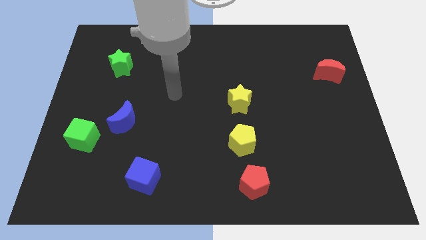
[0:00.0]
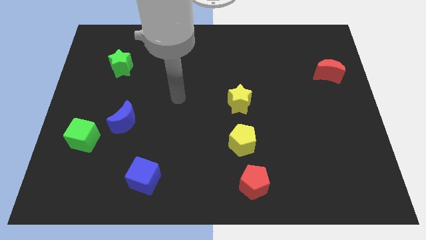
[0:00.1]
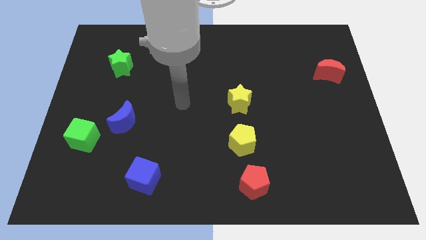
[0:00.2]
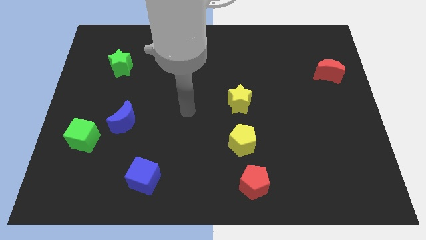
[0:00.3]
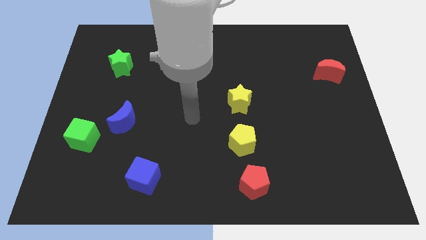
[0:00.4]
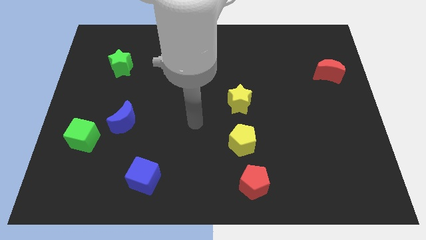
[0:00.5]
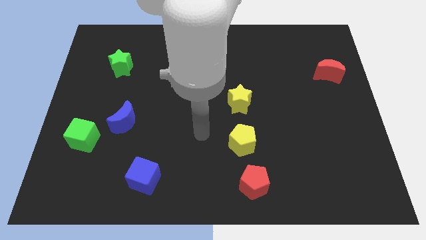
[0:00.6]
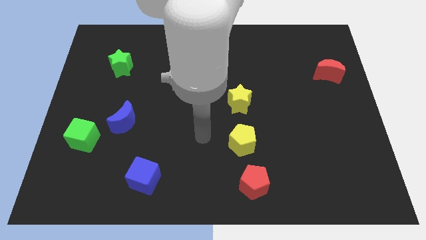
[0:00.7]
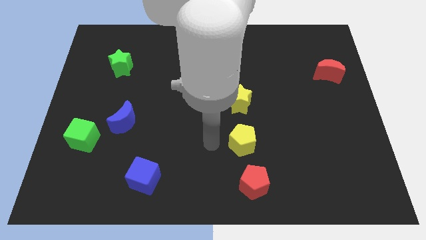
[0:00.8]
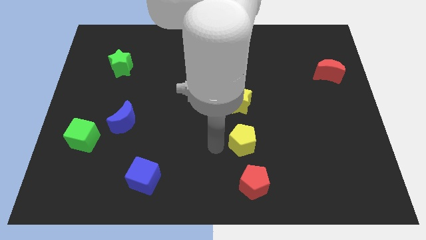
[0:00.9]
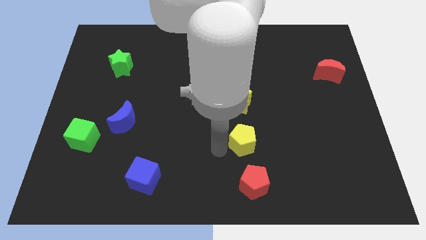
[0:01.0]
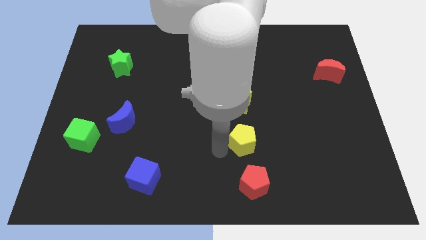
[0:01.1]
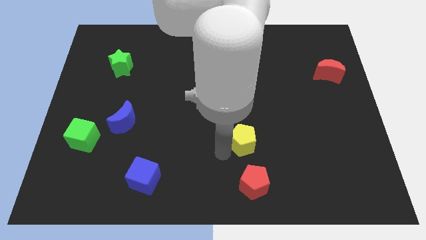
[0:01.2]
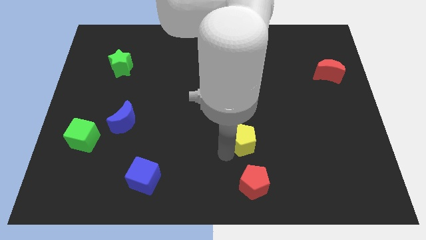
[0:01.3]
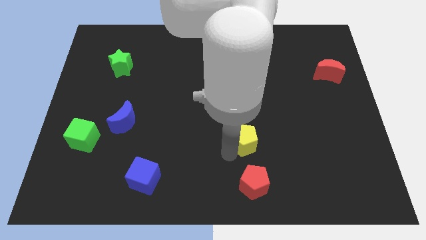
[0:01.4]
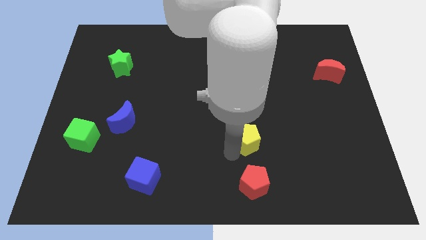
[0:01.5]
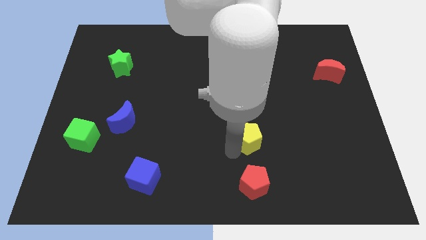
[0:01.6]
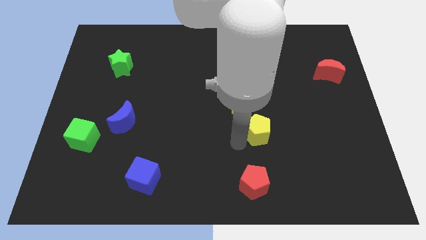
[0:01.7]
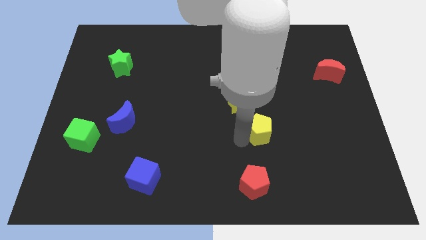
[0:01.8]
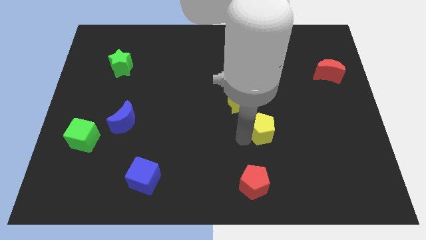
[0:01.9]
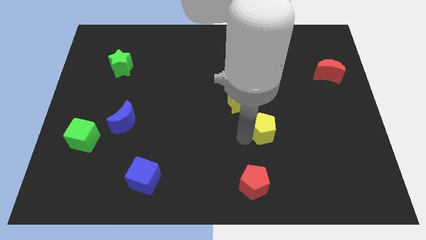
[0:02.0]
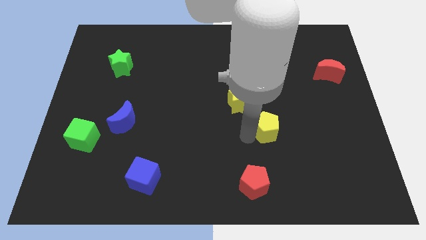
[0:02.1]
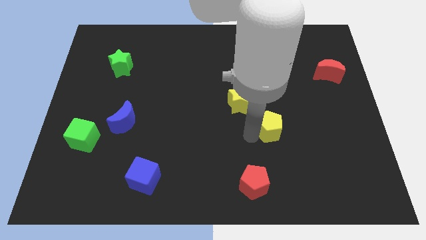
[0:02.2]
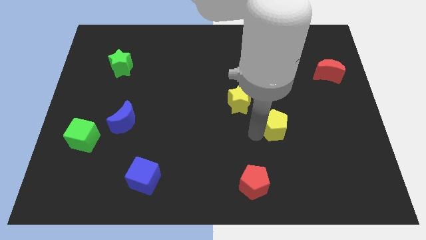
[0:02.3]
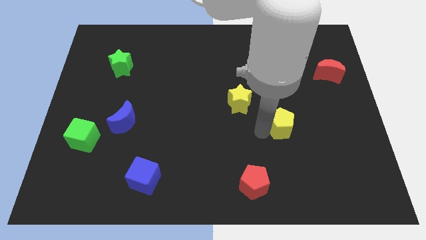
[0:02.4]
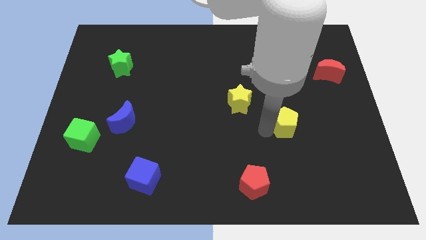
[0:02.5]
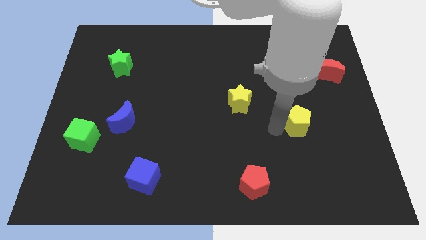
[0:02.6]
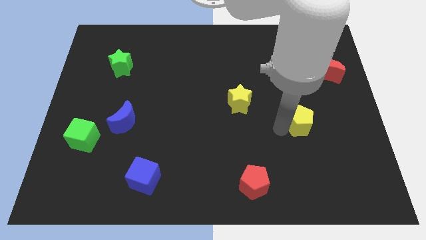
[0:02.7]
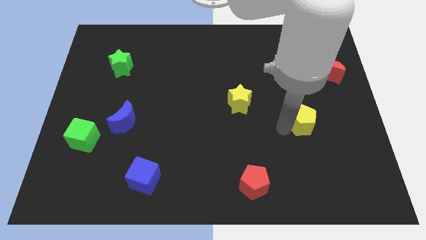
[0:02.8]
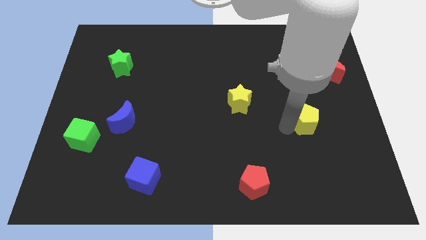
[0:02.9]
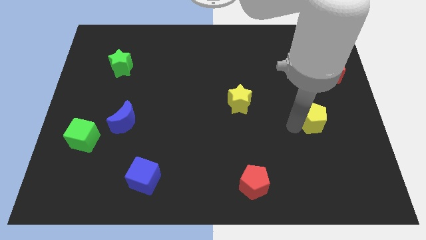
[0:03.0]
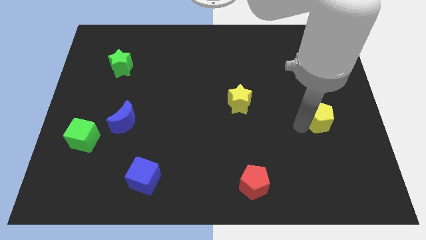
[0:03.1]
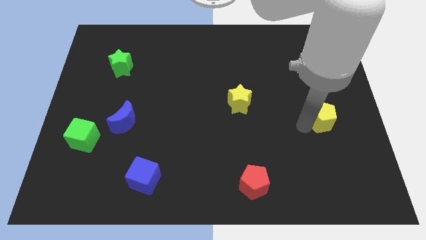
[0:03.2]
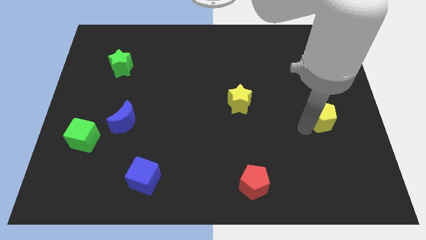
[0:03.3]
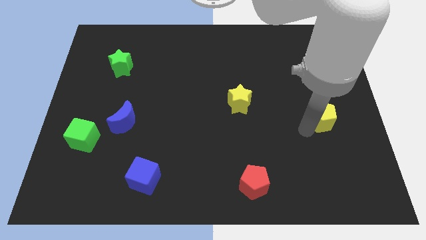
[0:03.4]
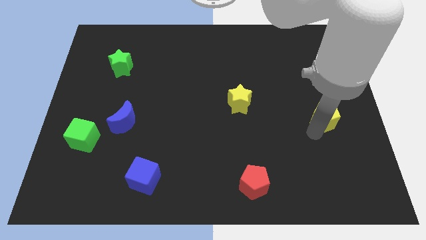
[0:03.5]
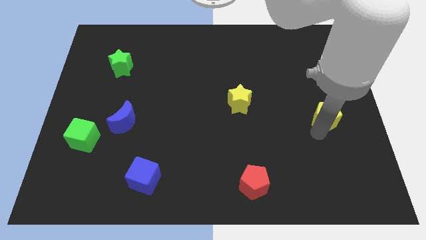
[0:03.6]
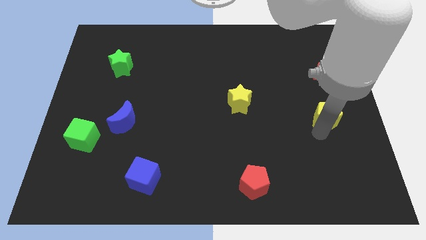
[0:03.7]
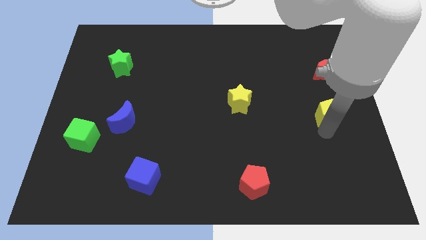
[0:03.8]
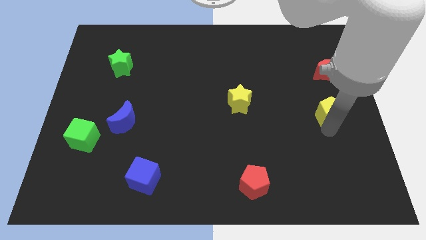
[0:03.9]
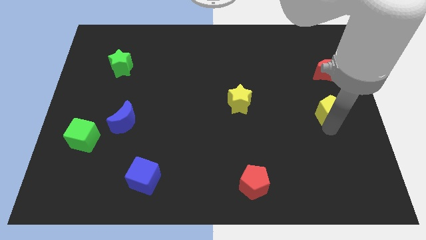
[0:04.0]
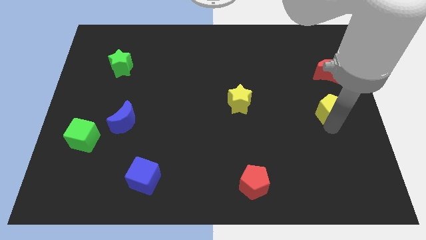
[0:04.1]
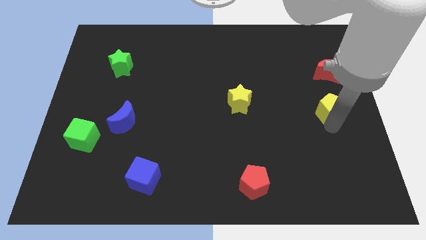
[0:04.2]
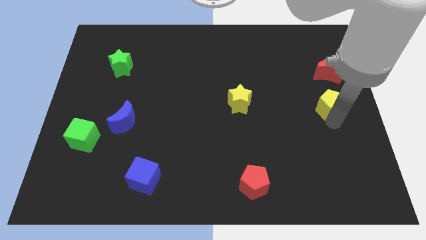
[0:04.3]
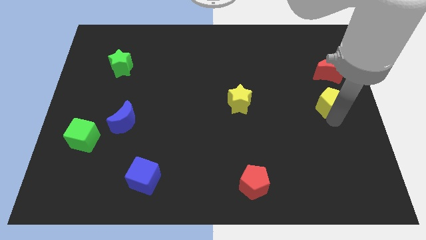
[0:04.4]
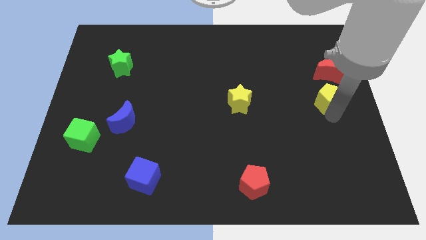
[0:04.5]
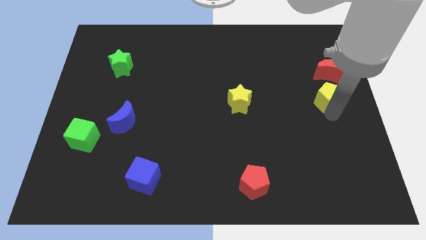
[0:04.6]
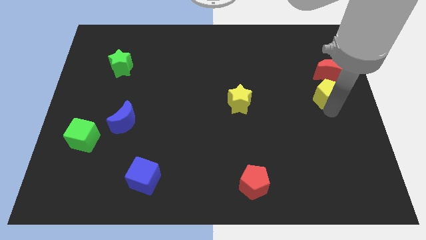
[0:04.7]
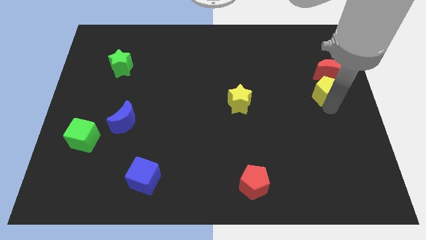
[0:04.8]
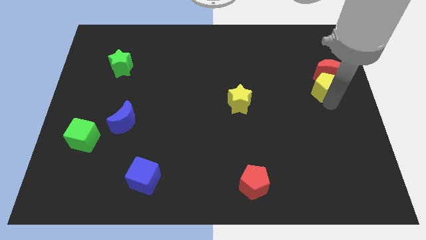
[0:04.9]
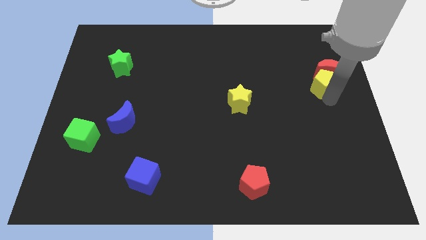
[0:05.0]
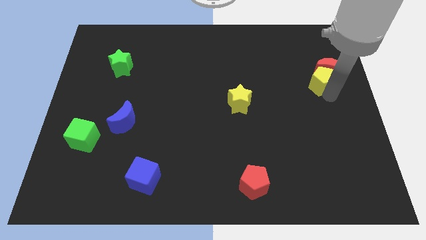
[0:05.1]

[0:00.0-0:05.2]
put the yellow pentagon to the red moon

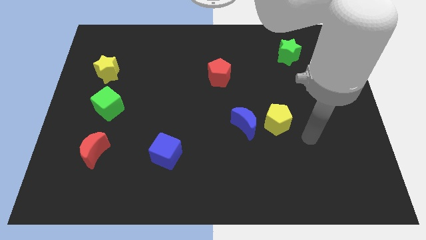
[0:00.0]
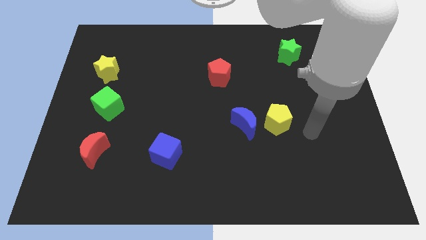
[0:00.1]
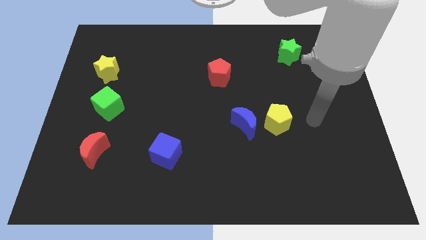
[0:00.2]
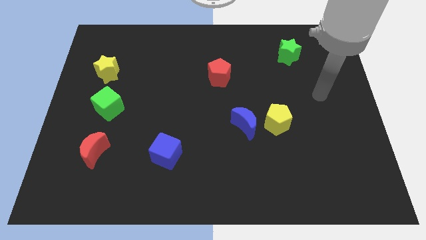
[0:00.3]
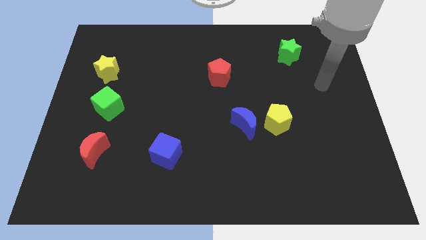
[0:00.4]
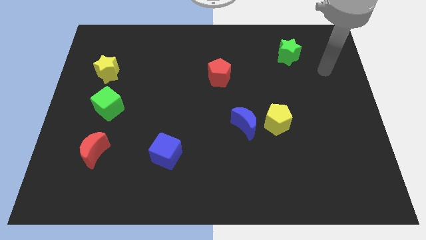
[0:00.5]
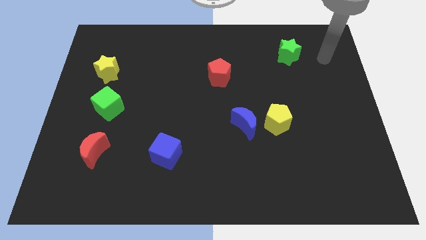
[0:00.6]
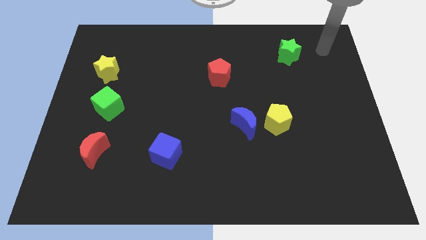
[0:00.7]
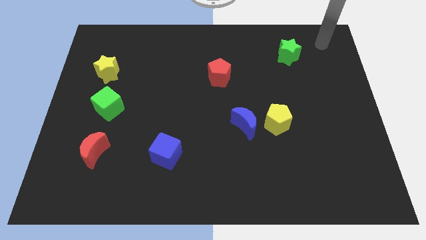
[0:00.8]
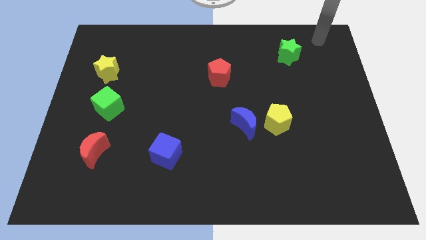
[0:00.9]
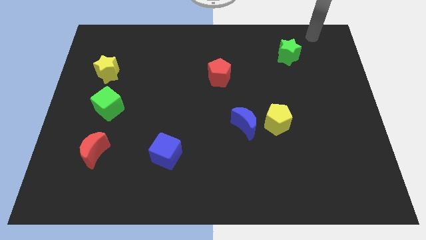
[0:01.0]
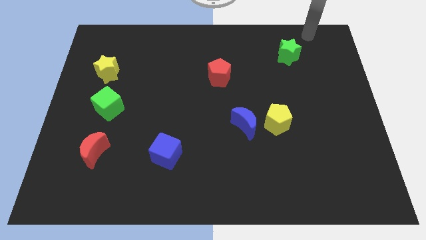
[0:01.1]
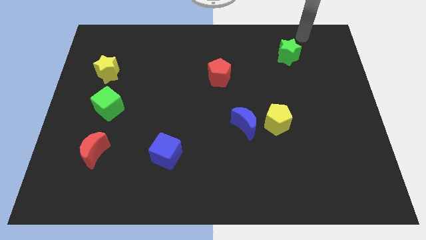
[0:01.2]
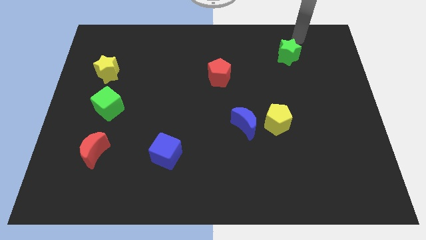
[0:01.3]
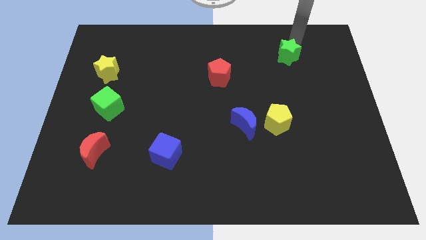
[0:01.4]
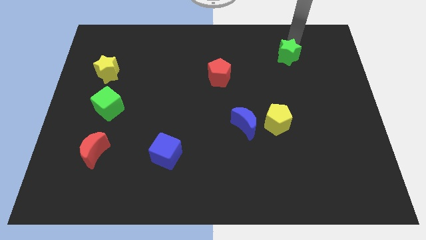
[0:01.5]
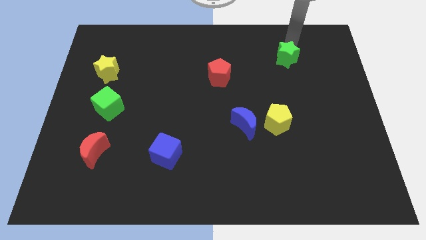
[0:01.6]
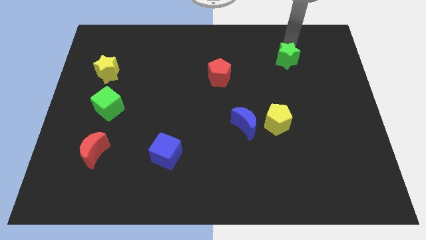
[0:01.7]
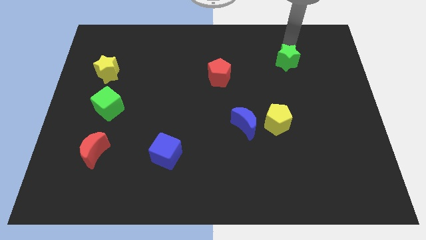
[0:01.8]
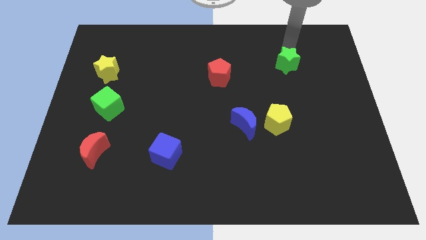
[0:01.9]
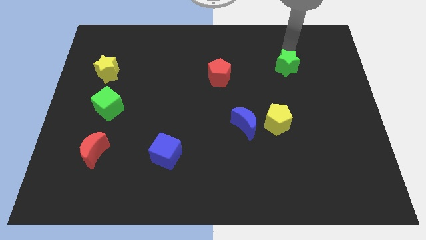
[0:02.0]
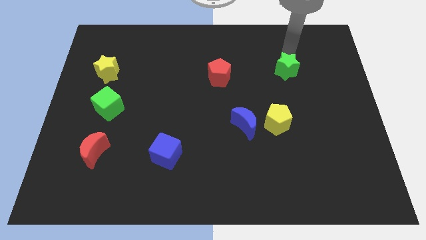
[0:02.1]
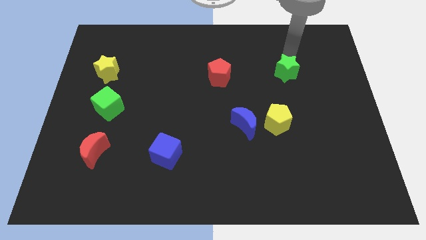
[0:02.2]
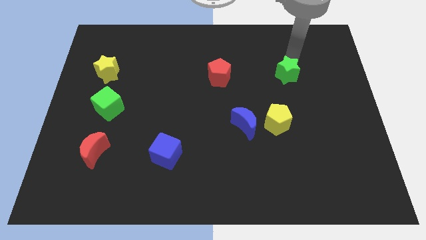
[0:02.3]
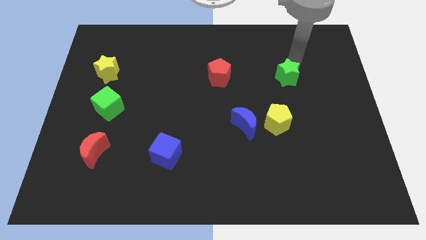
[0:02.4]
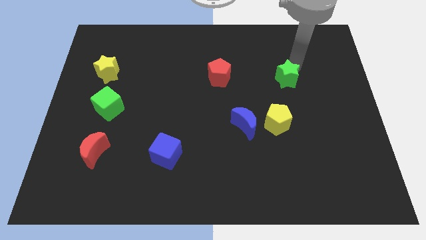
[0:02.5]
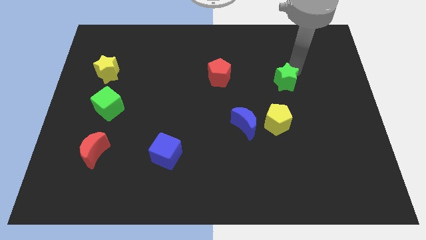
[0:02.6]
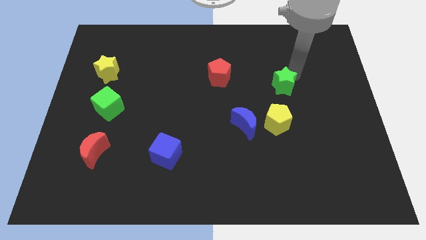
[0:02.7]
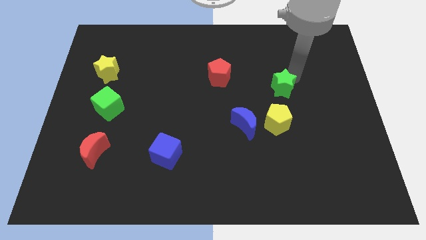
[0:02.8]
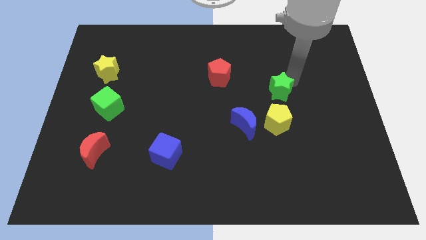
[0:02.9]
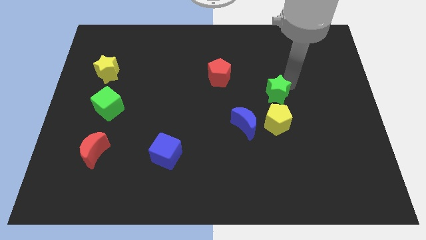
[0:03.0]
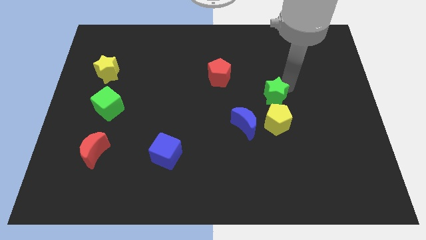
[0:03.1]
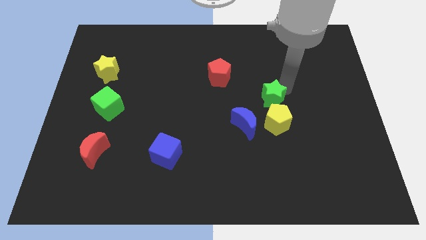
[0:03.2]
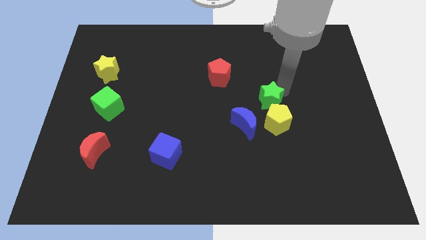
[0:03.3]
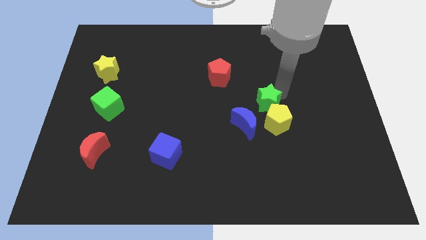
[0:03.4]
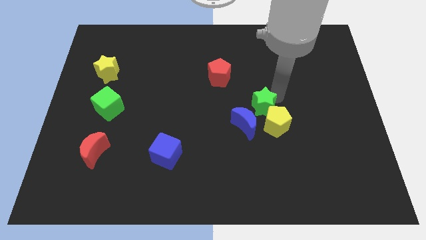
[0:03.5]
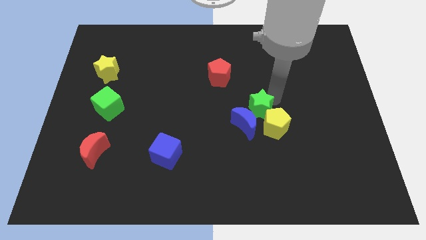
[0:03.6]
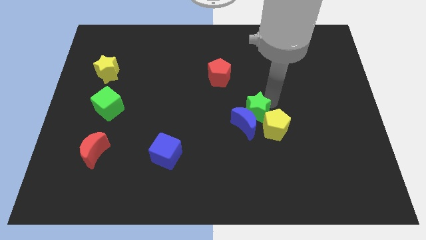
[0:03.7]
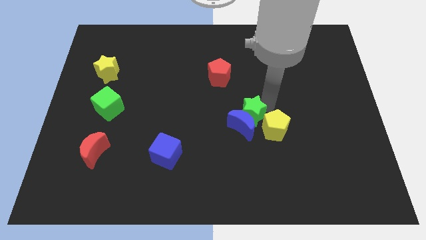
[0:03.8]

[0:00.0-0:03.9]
slide the green star close to the blue moon
